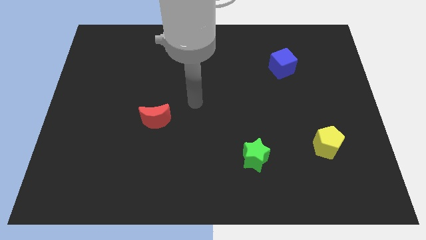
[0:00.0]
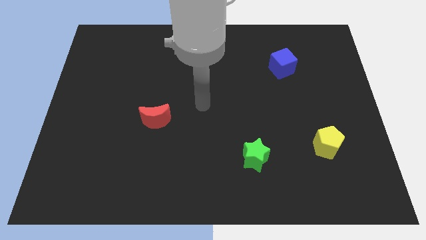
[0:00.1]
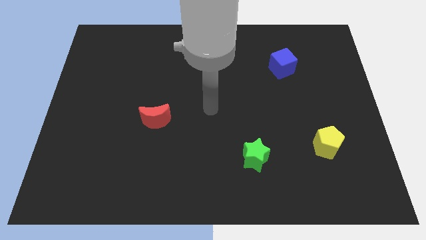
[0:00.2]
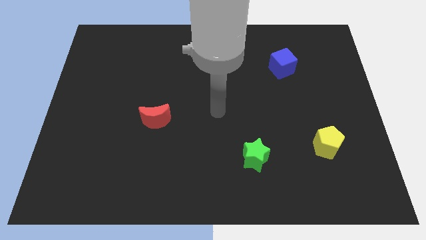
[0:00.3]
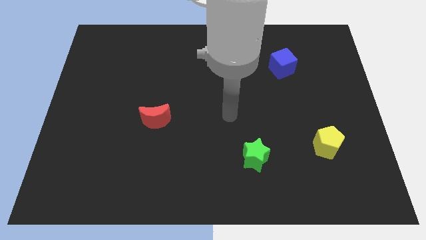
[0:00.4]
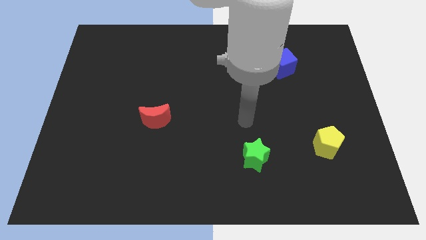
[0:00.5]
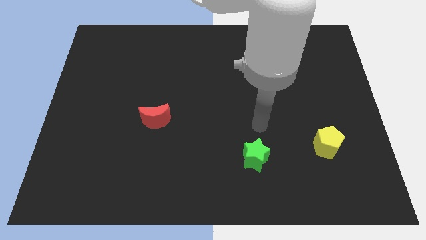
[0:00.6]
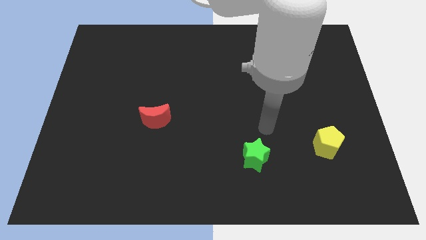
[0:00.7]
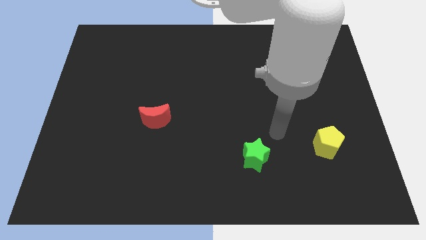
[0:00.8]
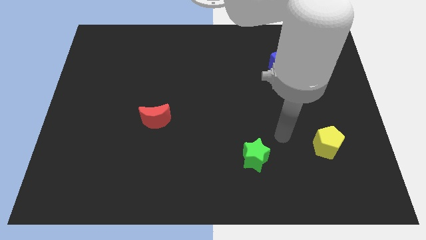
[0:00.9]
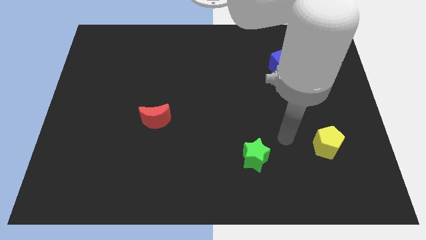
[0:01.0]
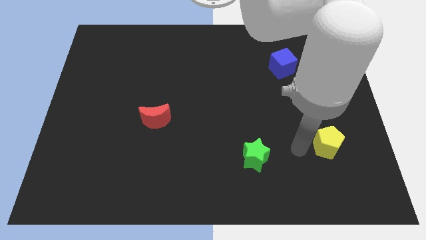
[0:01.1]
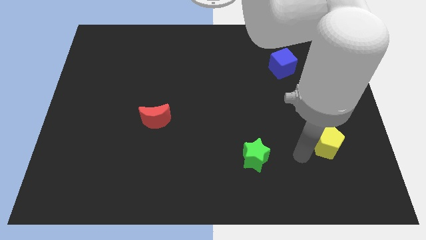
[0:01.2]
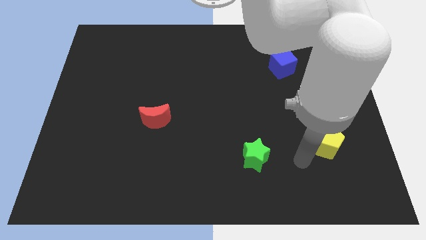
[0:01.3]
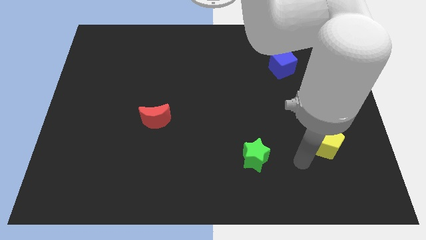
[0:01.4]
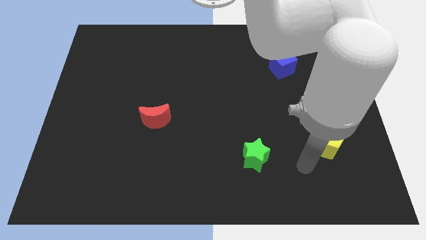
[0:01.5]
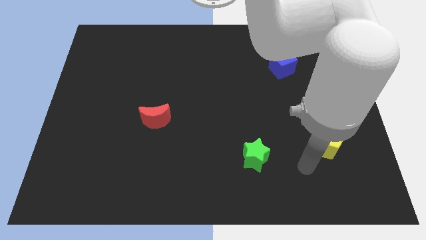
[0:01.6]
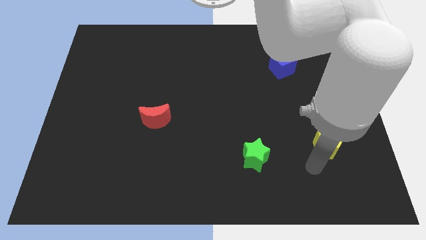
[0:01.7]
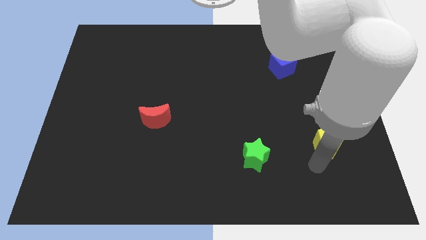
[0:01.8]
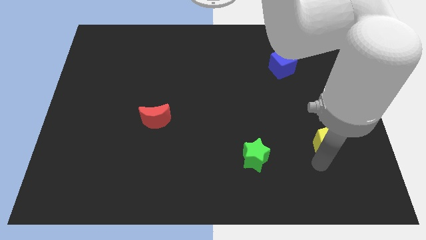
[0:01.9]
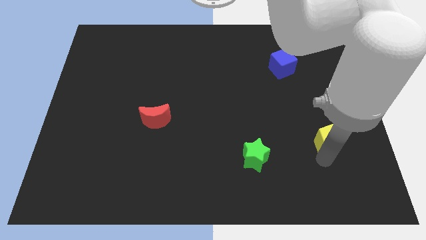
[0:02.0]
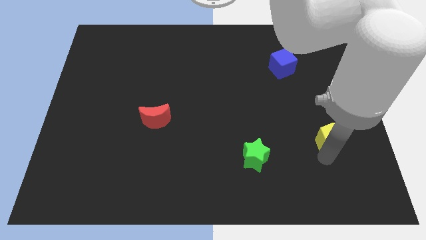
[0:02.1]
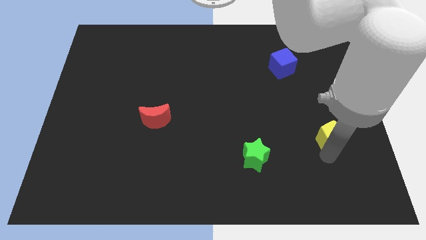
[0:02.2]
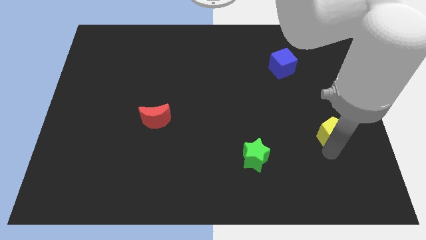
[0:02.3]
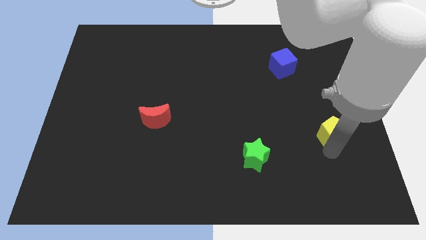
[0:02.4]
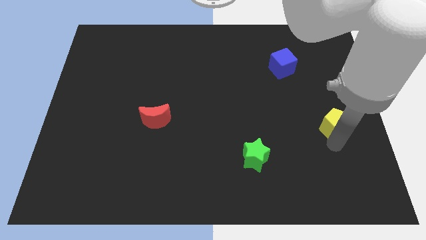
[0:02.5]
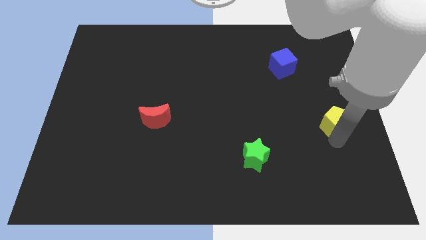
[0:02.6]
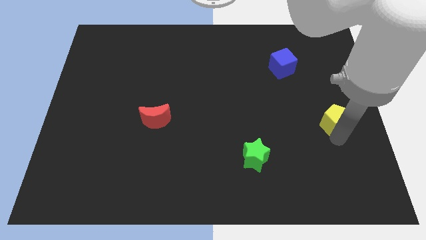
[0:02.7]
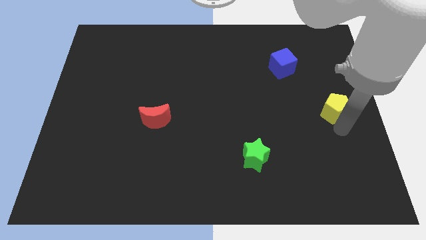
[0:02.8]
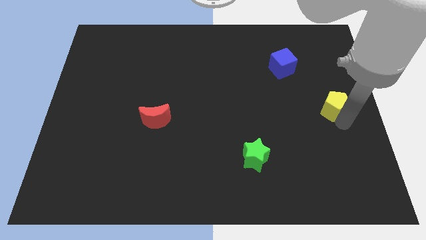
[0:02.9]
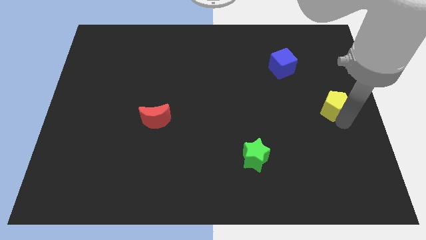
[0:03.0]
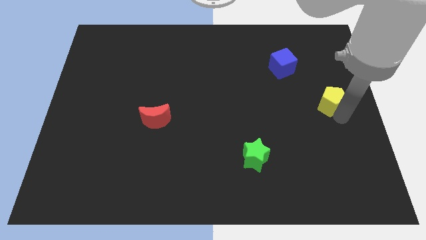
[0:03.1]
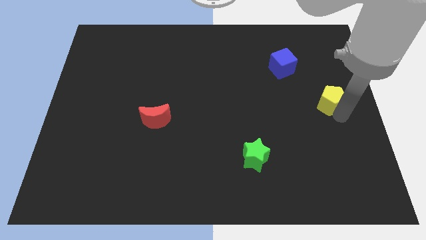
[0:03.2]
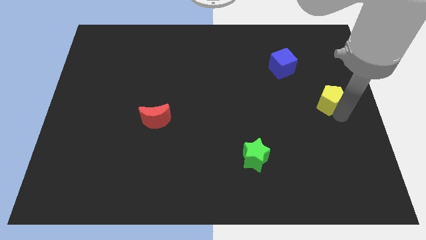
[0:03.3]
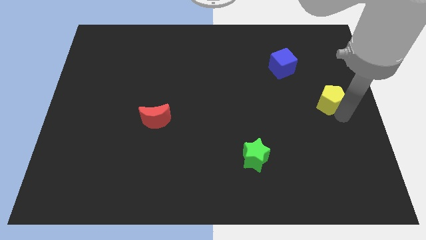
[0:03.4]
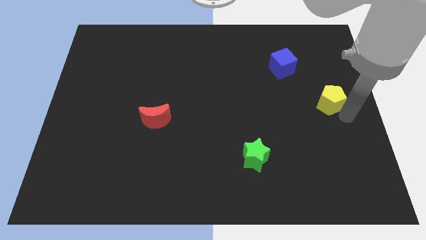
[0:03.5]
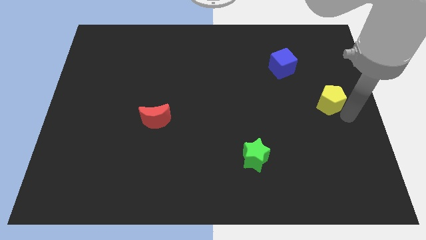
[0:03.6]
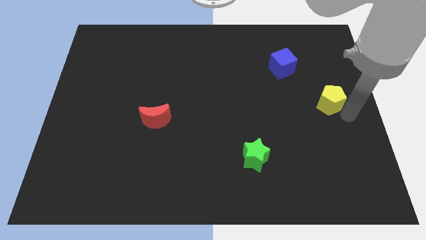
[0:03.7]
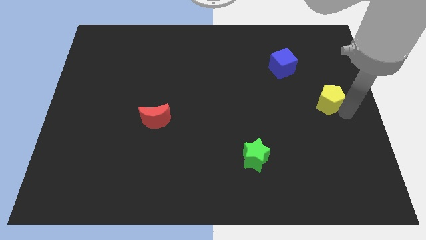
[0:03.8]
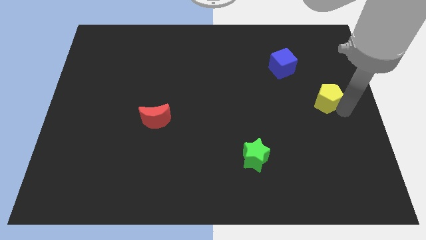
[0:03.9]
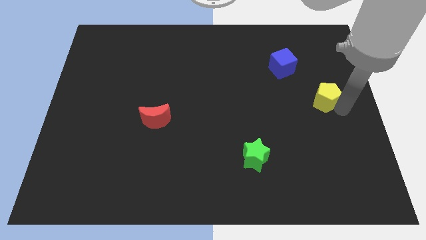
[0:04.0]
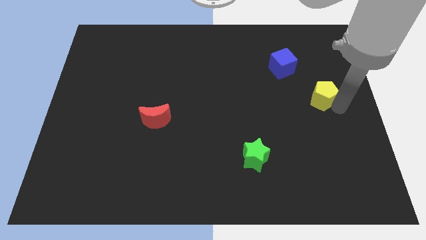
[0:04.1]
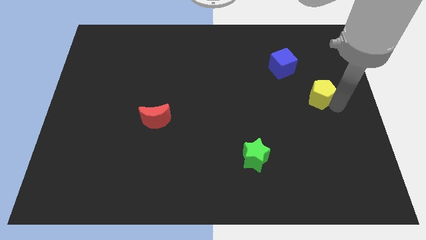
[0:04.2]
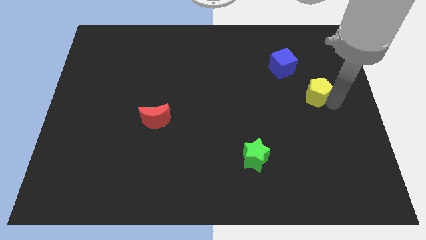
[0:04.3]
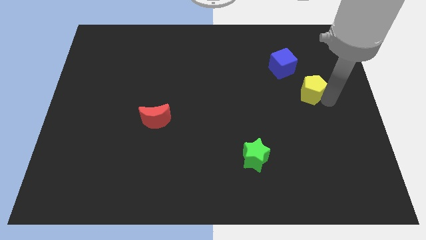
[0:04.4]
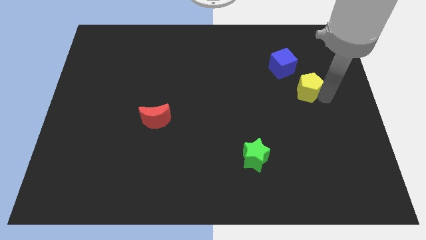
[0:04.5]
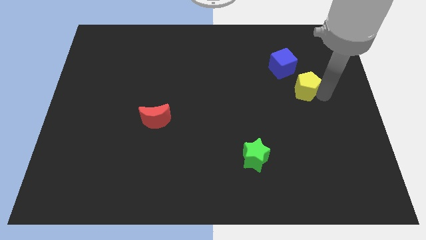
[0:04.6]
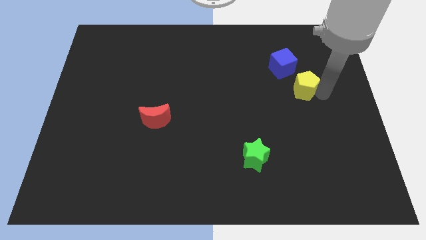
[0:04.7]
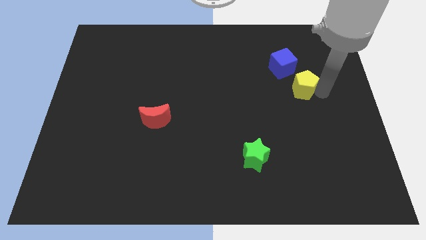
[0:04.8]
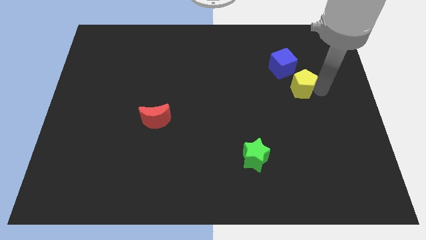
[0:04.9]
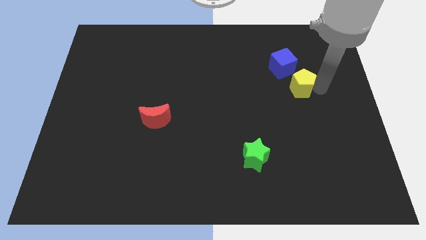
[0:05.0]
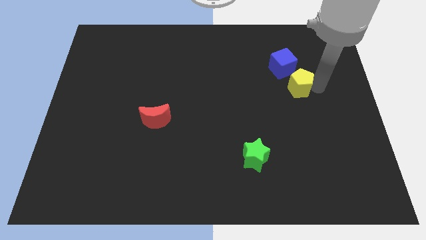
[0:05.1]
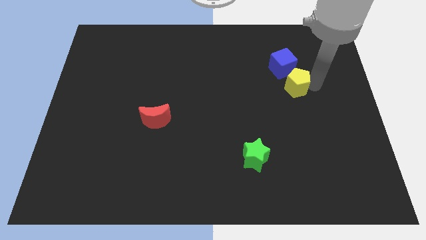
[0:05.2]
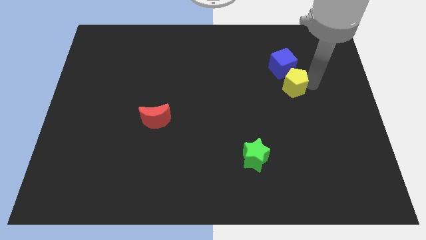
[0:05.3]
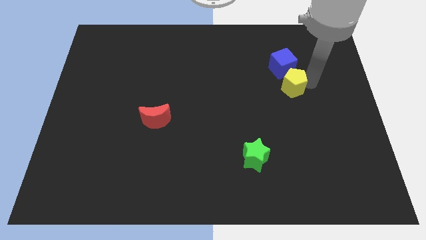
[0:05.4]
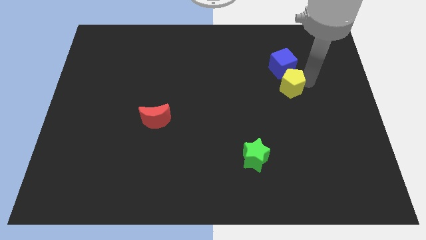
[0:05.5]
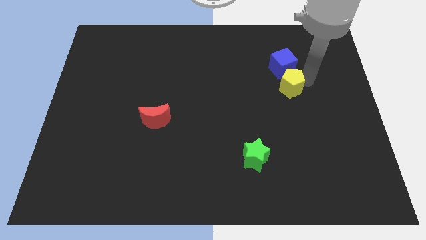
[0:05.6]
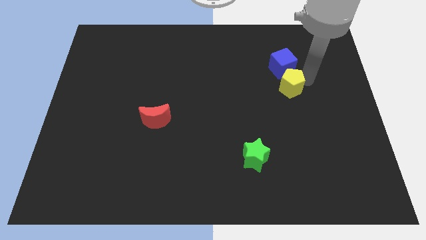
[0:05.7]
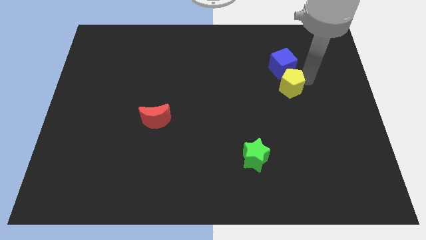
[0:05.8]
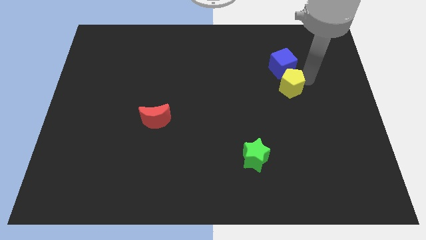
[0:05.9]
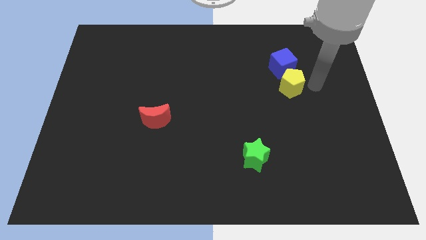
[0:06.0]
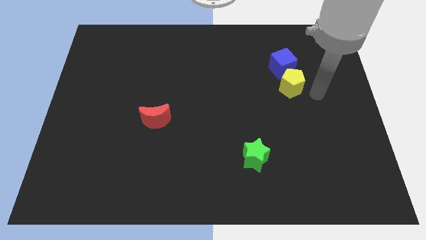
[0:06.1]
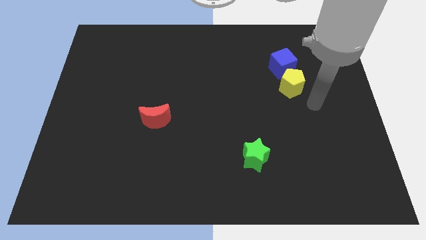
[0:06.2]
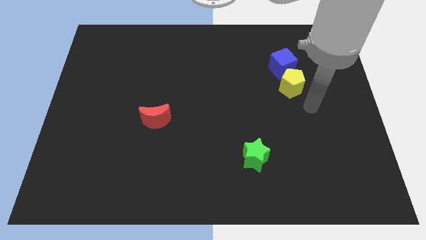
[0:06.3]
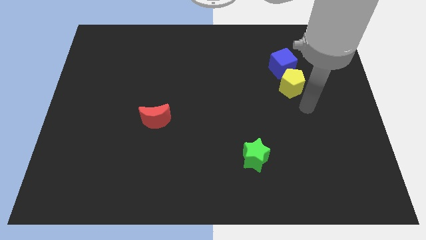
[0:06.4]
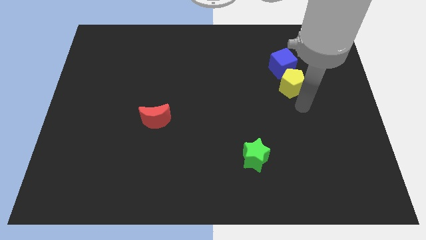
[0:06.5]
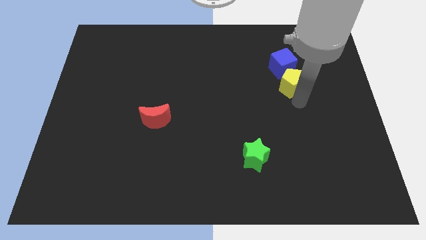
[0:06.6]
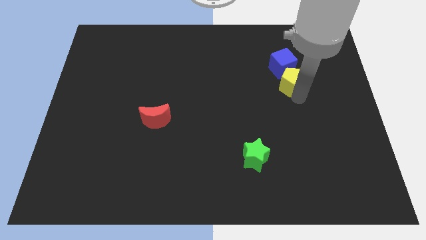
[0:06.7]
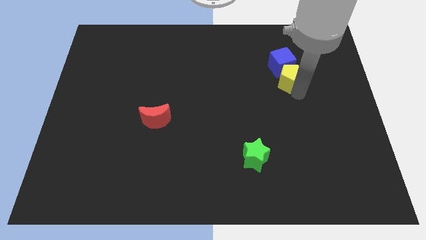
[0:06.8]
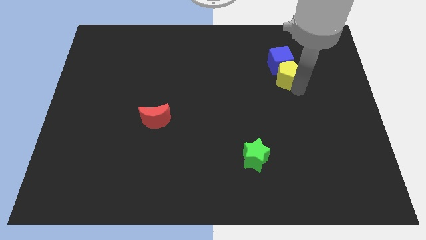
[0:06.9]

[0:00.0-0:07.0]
move the yellow pentagon towards the blue block

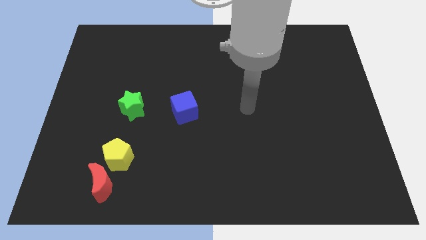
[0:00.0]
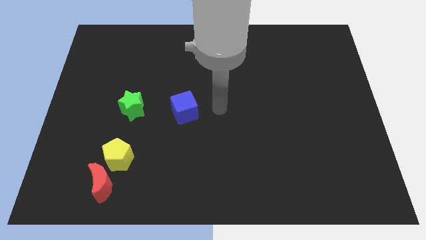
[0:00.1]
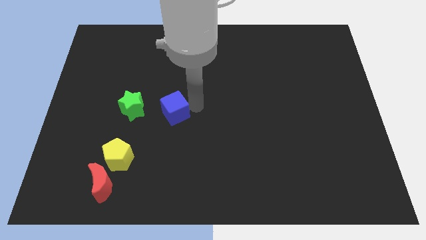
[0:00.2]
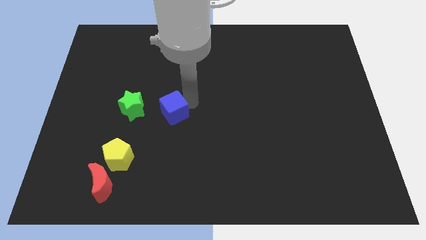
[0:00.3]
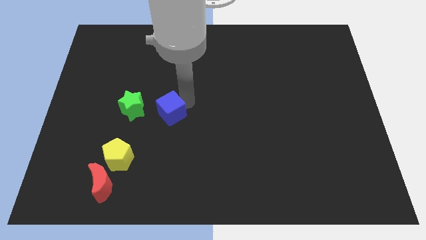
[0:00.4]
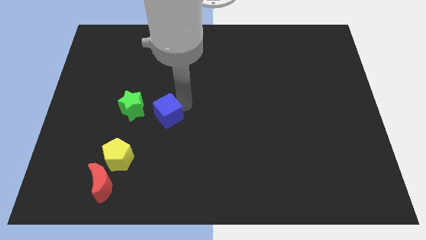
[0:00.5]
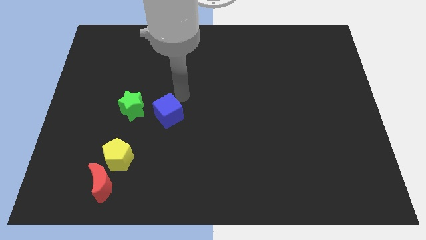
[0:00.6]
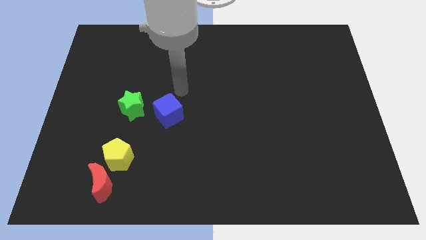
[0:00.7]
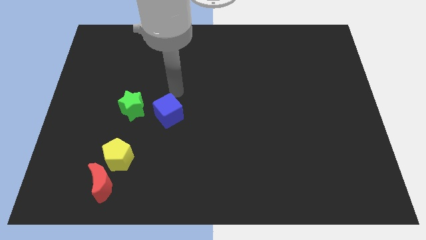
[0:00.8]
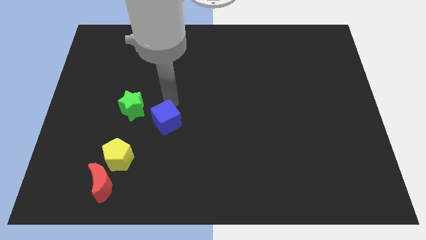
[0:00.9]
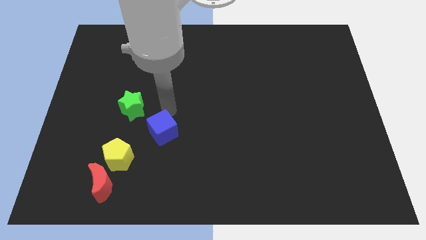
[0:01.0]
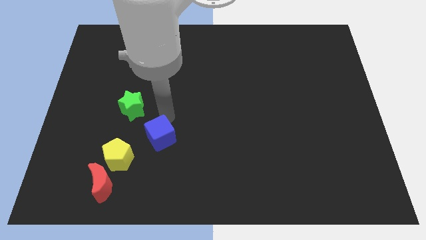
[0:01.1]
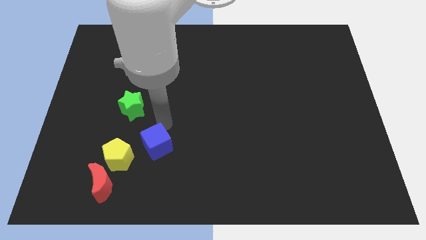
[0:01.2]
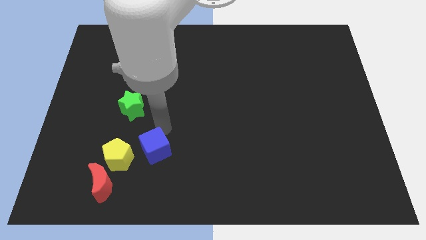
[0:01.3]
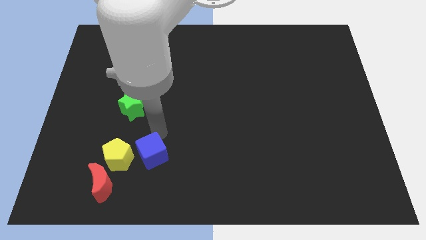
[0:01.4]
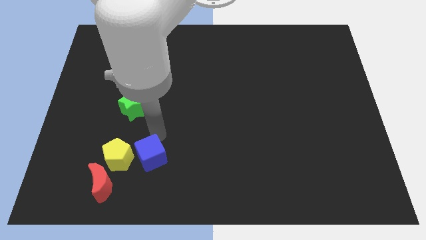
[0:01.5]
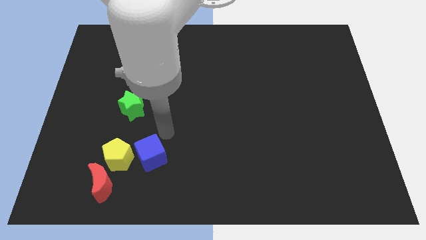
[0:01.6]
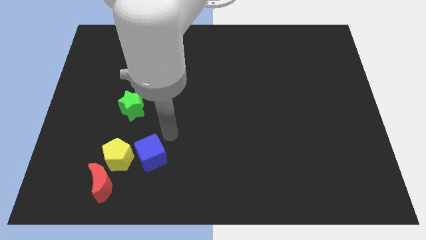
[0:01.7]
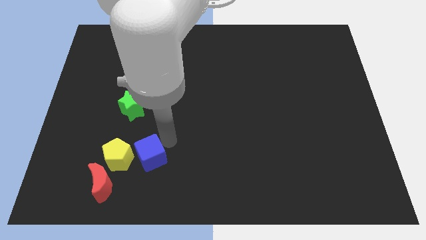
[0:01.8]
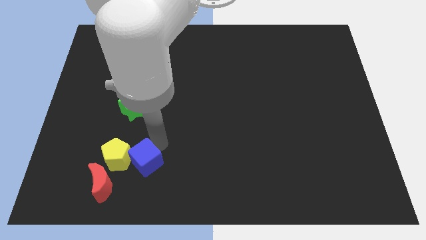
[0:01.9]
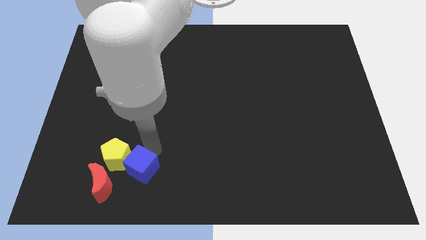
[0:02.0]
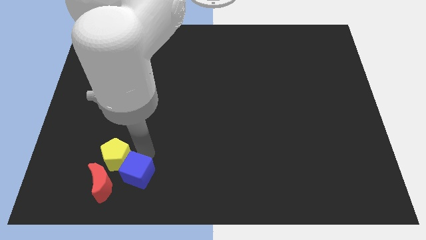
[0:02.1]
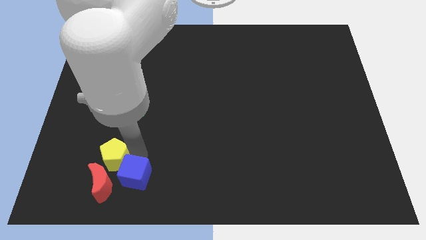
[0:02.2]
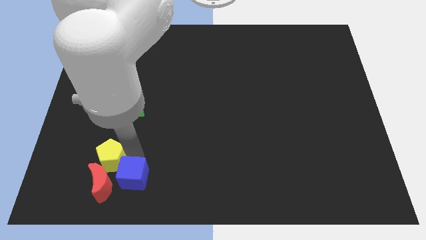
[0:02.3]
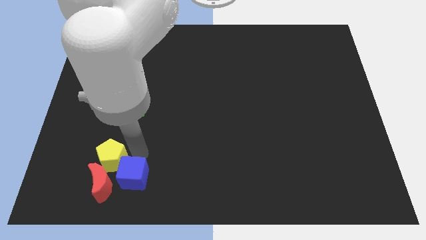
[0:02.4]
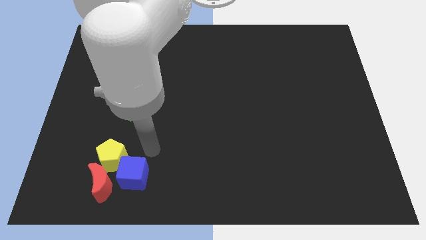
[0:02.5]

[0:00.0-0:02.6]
move the blue cube to the red block
